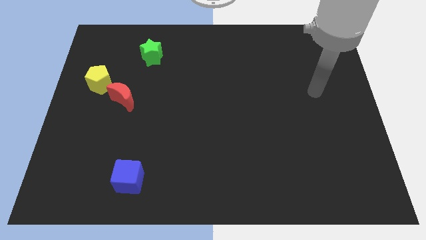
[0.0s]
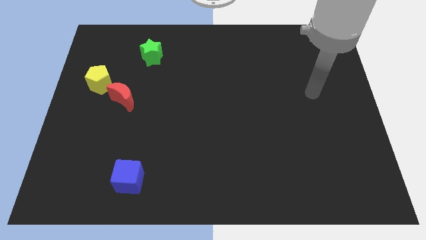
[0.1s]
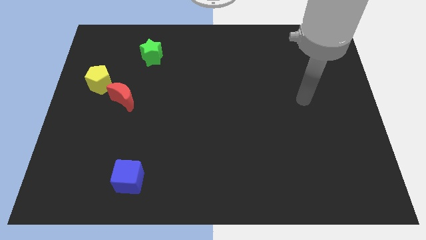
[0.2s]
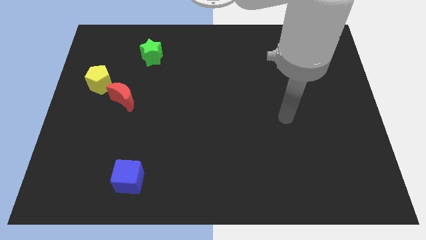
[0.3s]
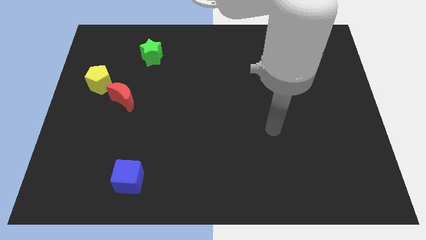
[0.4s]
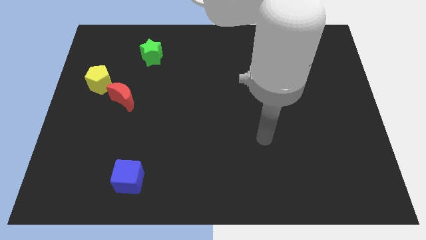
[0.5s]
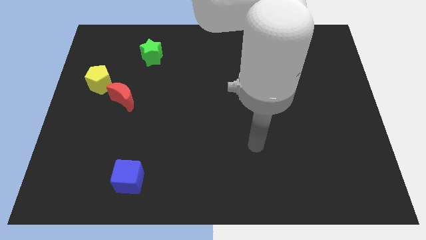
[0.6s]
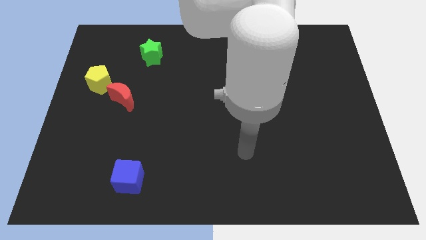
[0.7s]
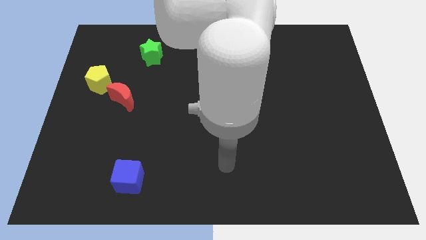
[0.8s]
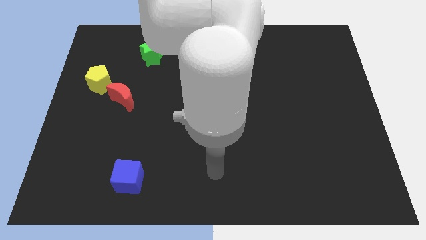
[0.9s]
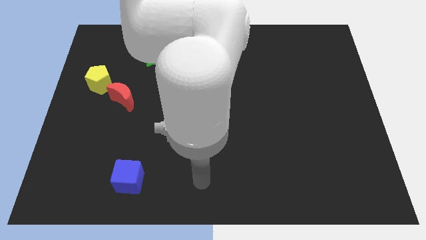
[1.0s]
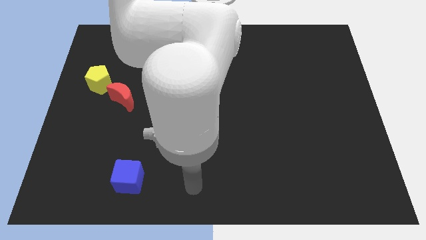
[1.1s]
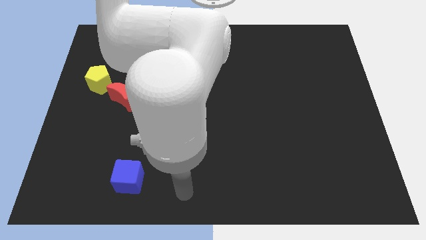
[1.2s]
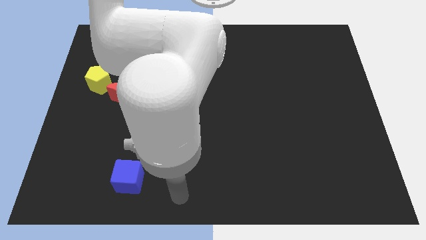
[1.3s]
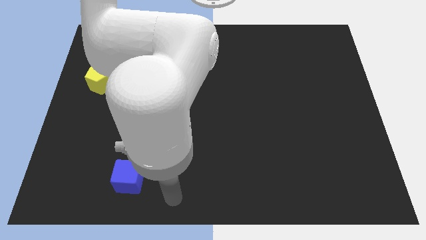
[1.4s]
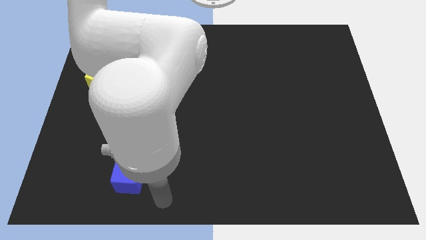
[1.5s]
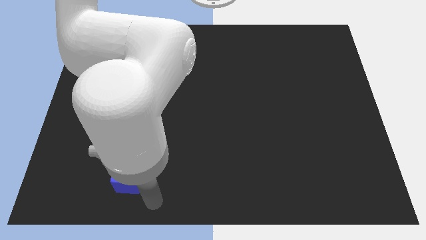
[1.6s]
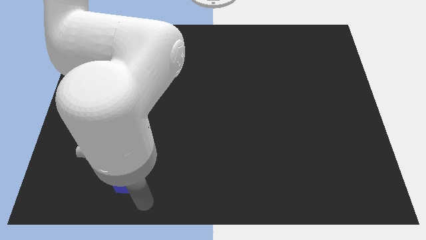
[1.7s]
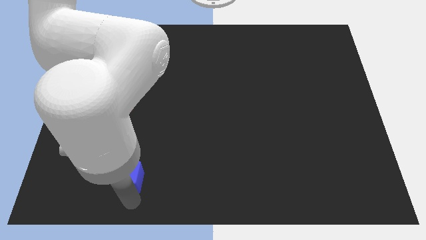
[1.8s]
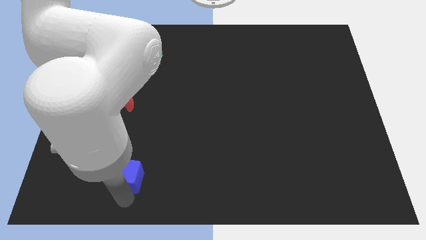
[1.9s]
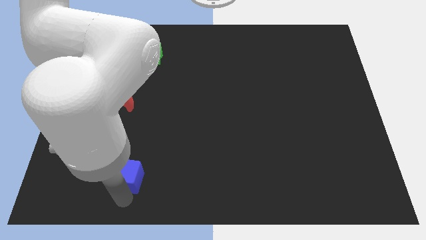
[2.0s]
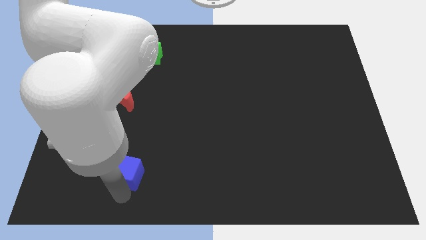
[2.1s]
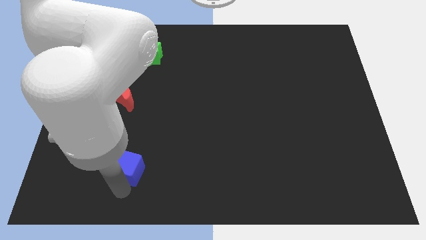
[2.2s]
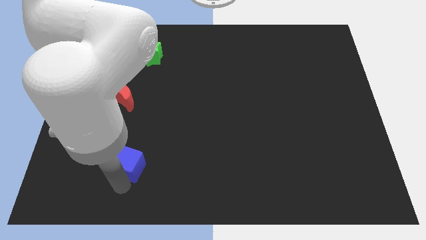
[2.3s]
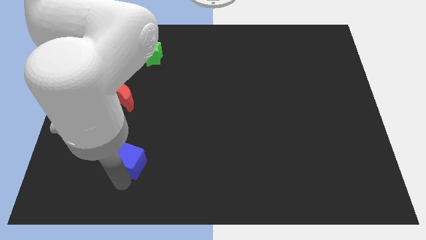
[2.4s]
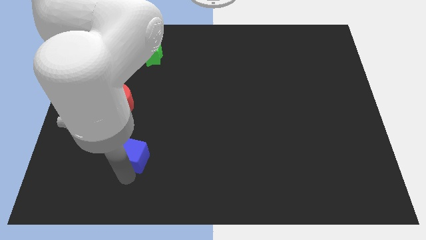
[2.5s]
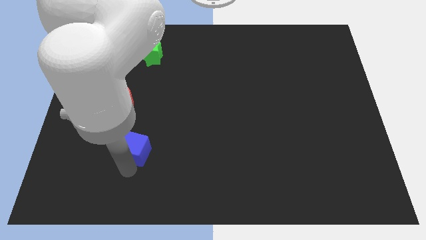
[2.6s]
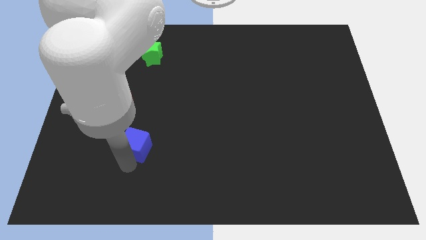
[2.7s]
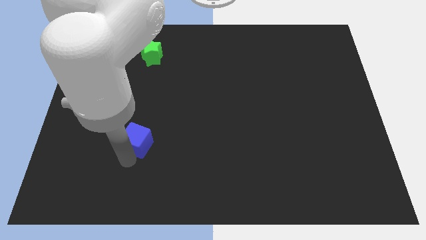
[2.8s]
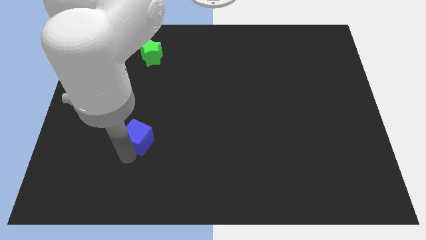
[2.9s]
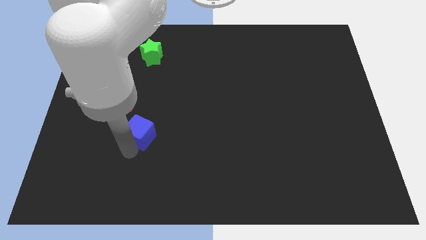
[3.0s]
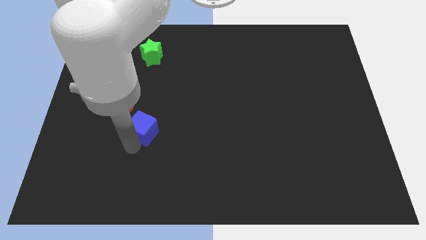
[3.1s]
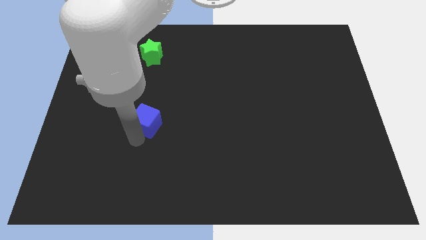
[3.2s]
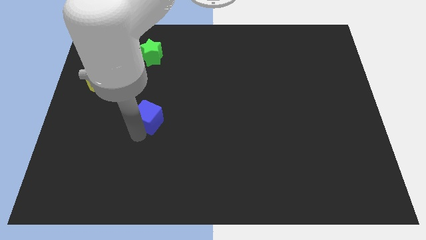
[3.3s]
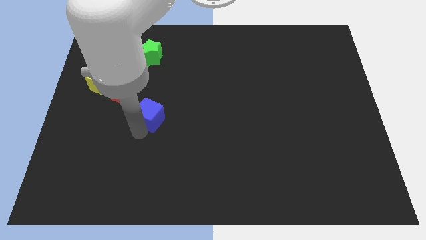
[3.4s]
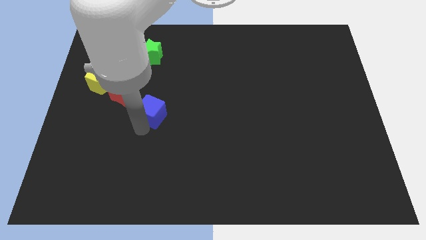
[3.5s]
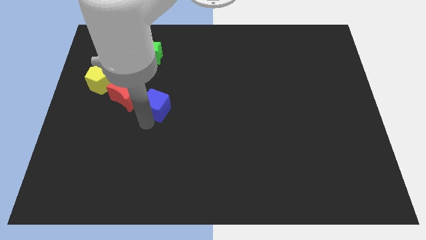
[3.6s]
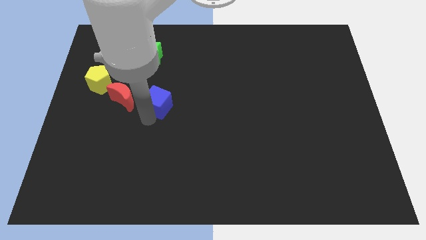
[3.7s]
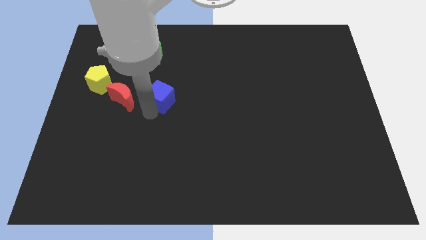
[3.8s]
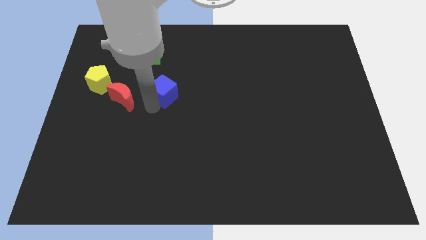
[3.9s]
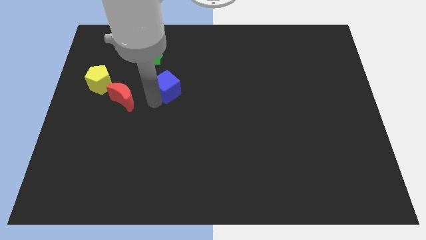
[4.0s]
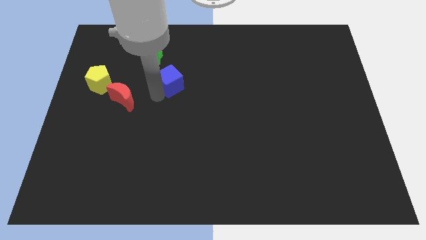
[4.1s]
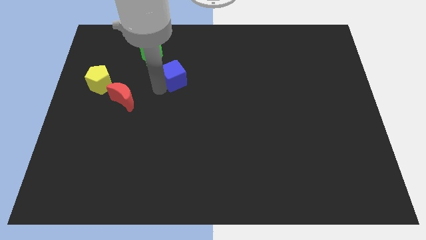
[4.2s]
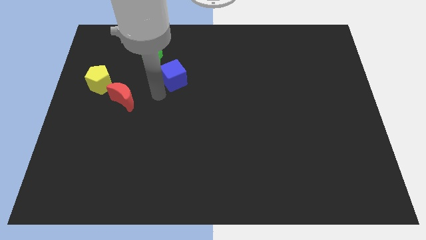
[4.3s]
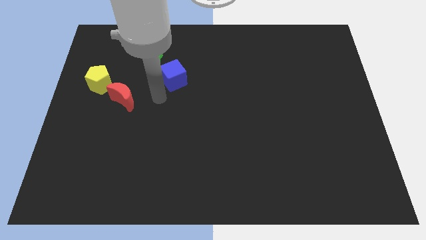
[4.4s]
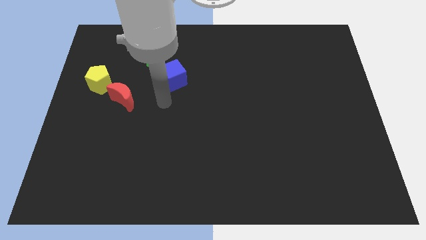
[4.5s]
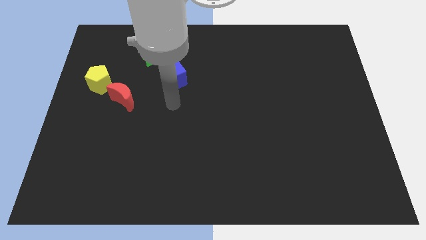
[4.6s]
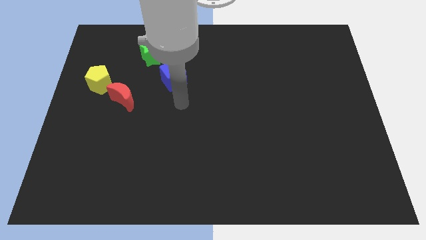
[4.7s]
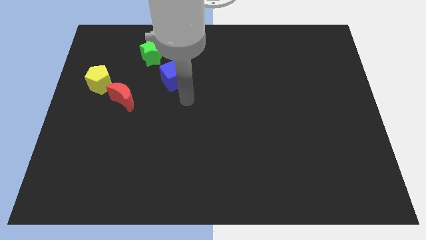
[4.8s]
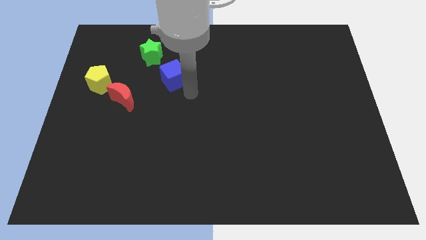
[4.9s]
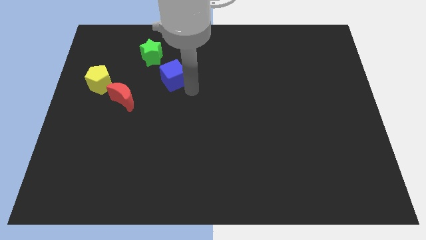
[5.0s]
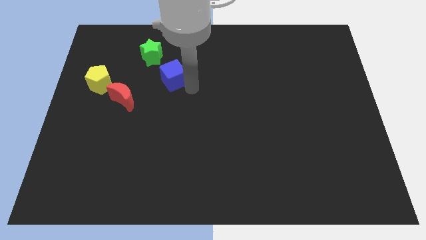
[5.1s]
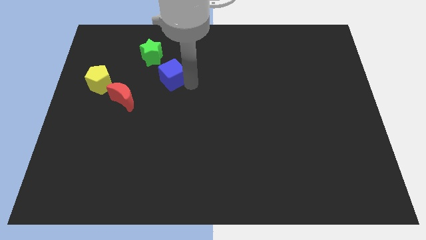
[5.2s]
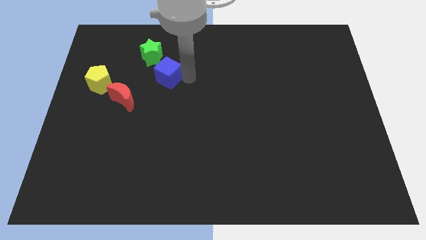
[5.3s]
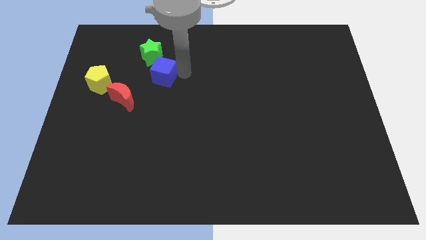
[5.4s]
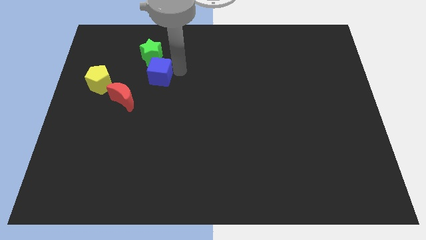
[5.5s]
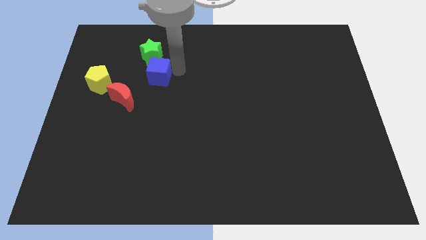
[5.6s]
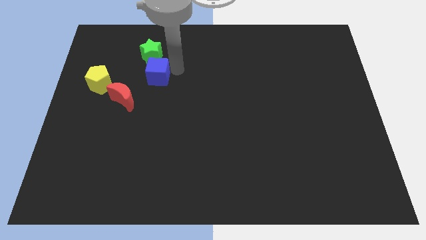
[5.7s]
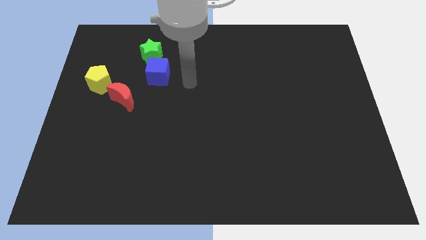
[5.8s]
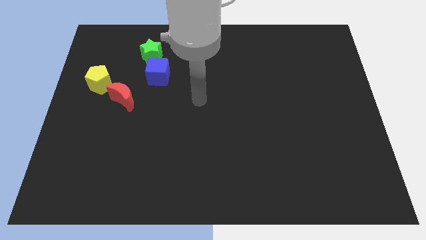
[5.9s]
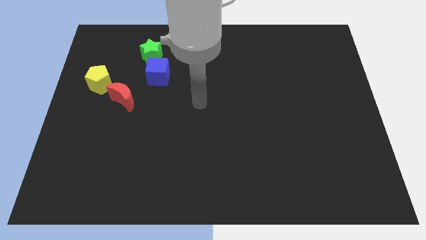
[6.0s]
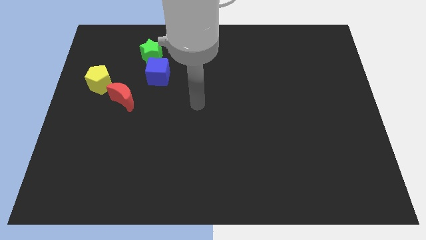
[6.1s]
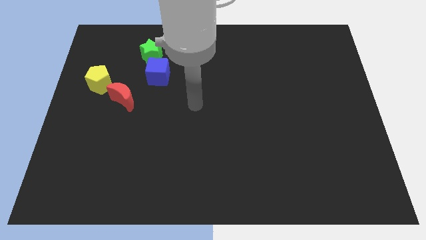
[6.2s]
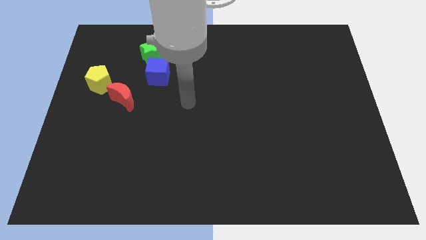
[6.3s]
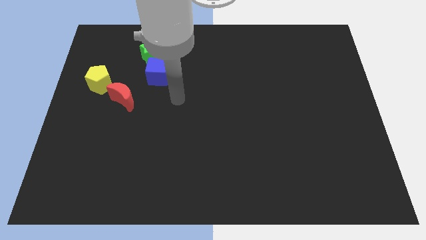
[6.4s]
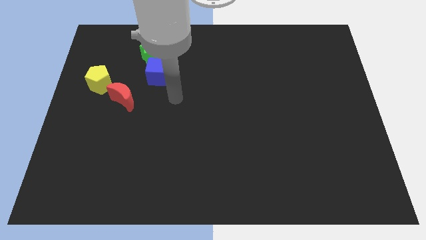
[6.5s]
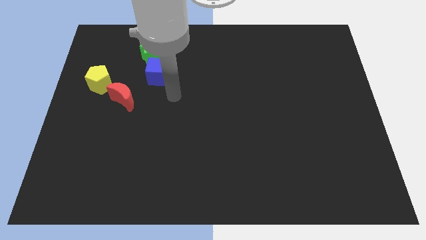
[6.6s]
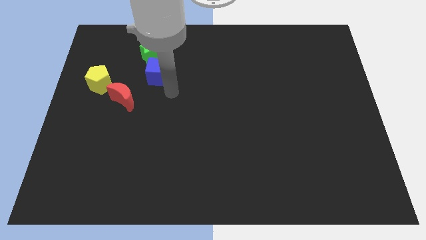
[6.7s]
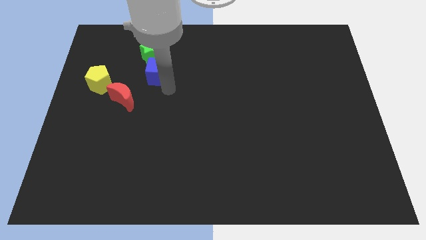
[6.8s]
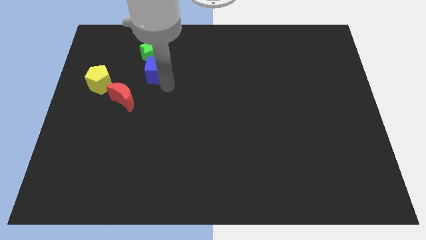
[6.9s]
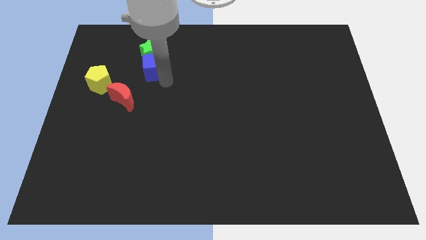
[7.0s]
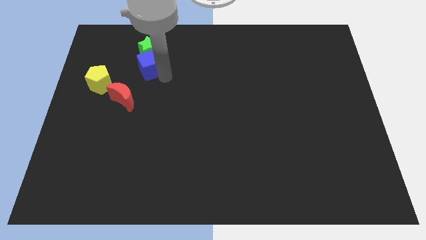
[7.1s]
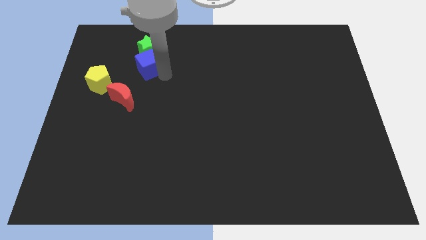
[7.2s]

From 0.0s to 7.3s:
push the cube next to the star

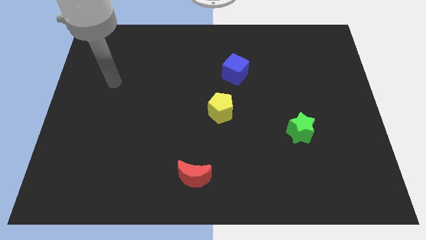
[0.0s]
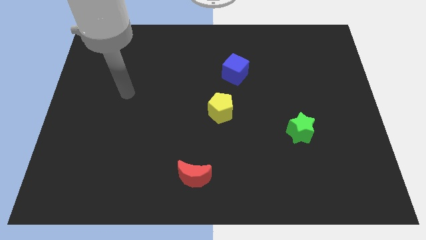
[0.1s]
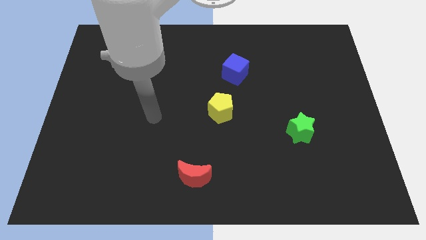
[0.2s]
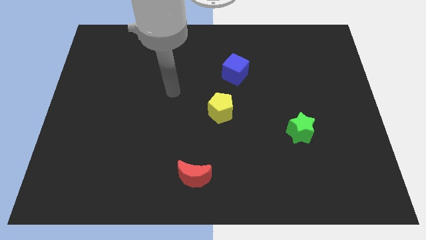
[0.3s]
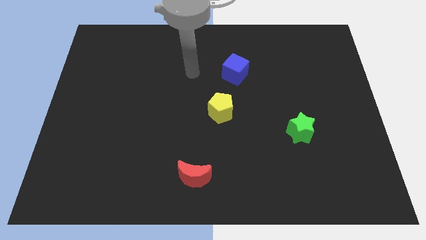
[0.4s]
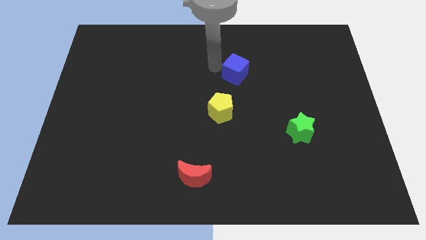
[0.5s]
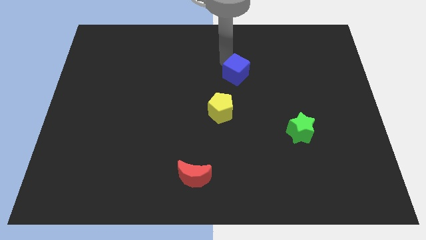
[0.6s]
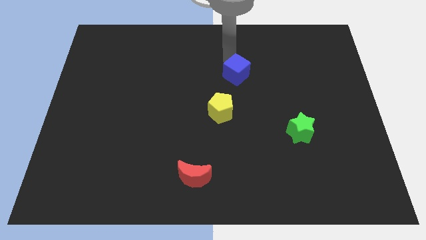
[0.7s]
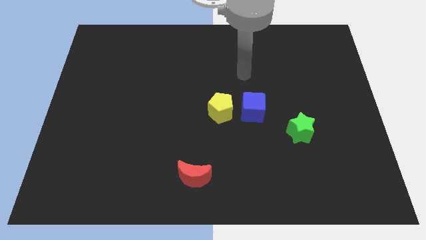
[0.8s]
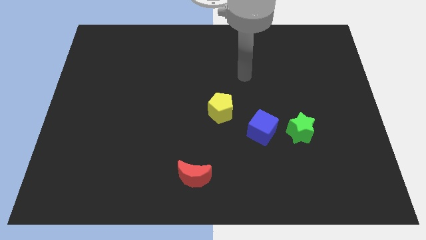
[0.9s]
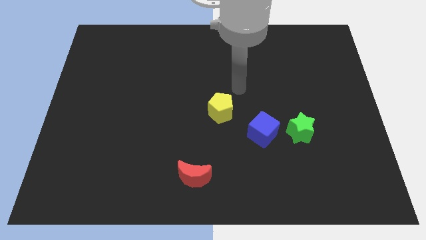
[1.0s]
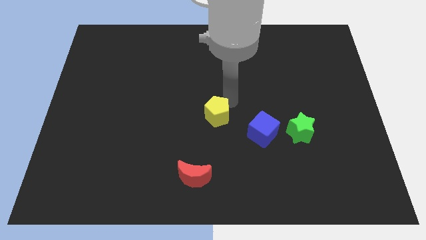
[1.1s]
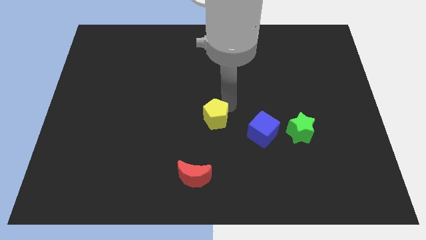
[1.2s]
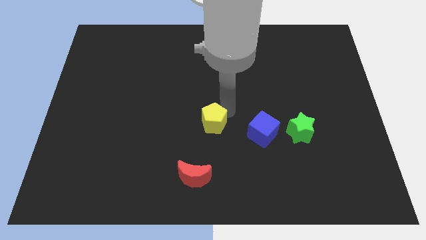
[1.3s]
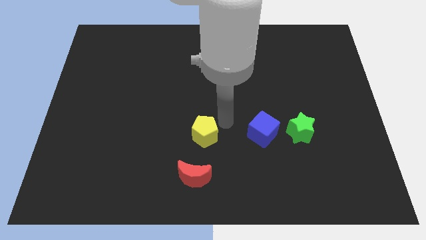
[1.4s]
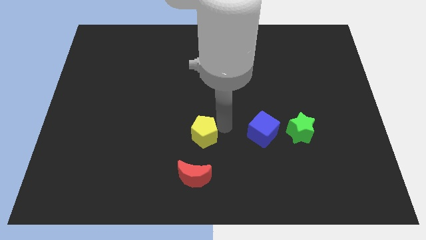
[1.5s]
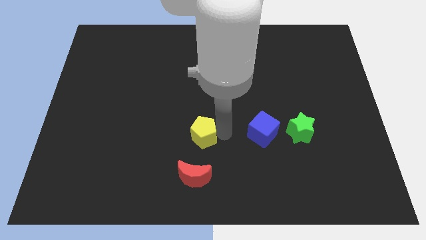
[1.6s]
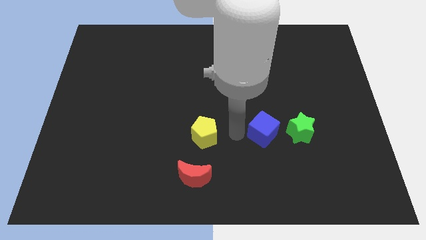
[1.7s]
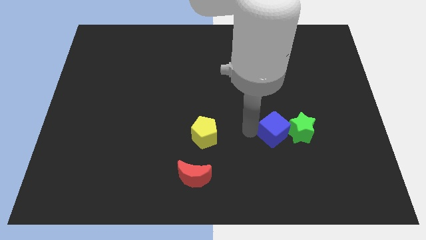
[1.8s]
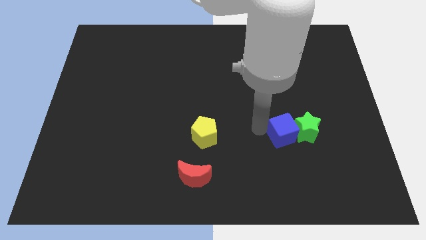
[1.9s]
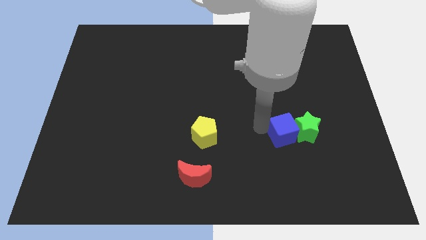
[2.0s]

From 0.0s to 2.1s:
push the blue cube close to the star
